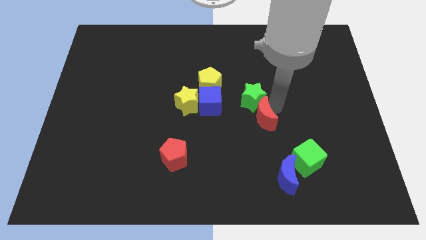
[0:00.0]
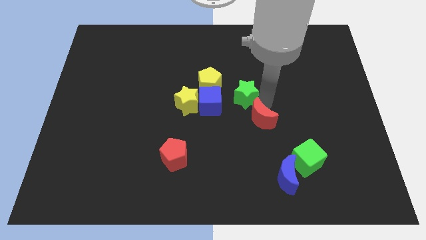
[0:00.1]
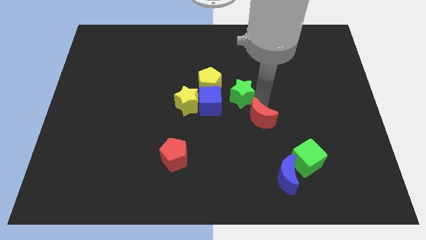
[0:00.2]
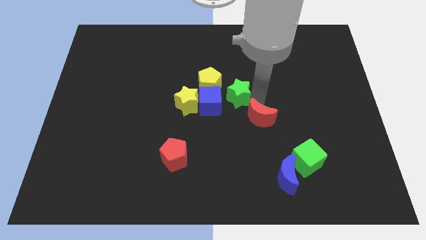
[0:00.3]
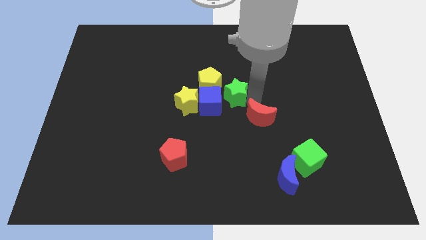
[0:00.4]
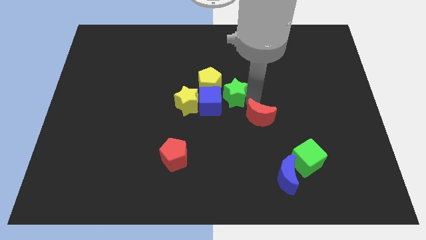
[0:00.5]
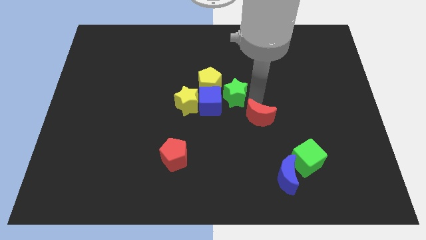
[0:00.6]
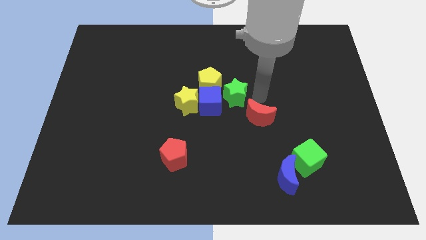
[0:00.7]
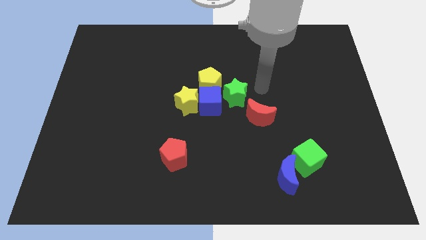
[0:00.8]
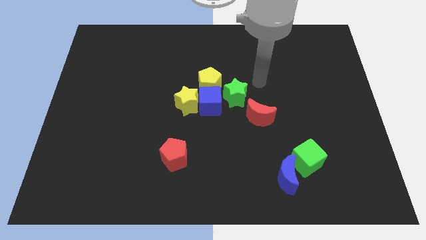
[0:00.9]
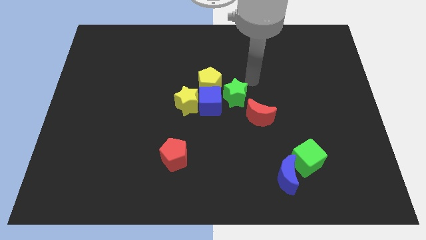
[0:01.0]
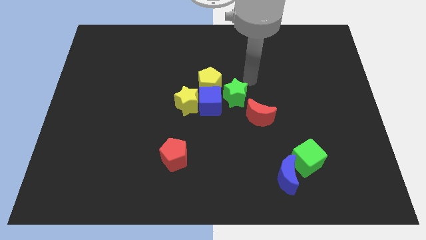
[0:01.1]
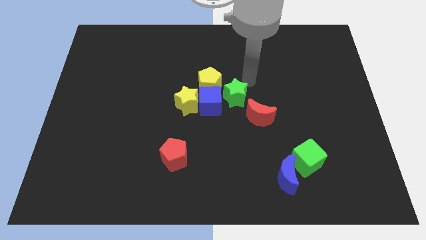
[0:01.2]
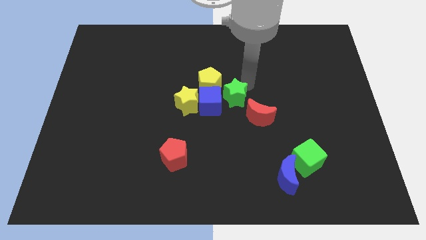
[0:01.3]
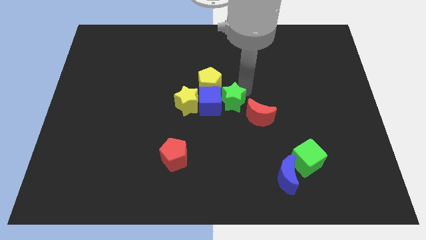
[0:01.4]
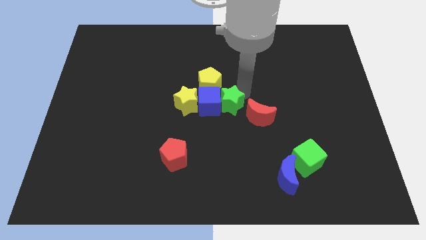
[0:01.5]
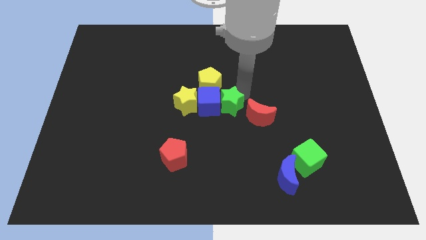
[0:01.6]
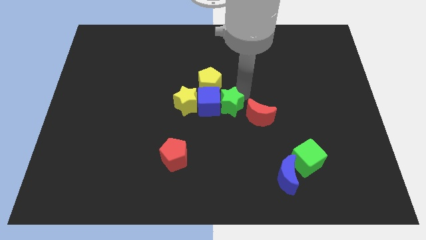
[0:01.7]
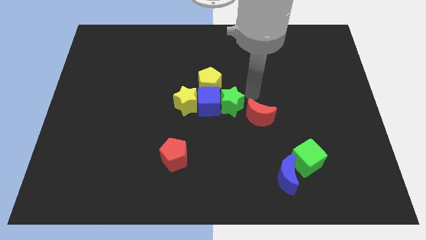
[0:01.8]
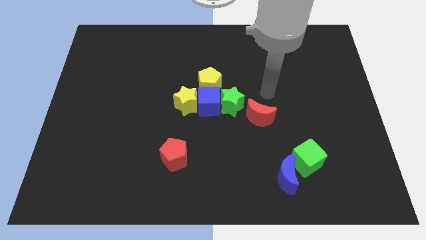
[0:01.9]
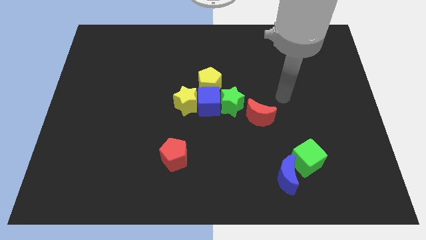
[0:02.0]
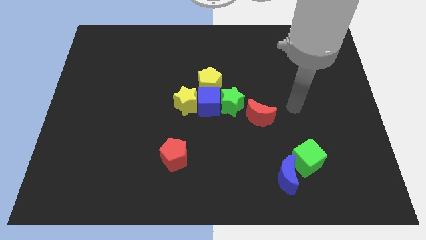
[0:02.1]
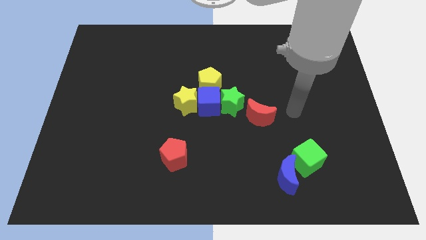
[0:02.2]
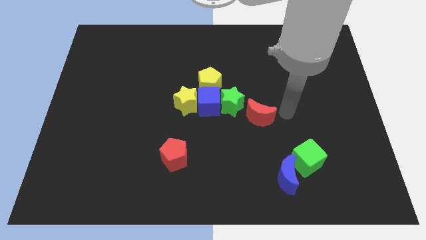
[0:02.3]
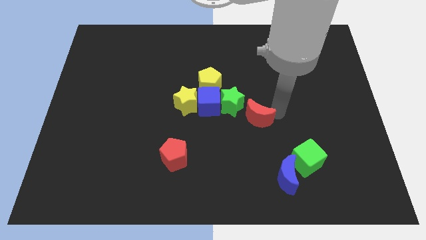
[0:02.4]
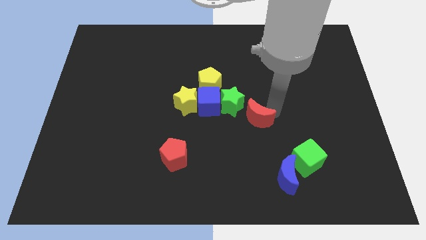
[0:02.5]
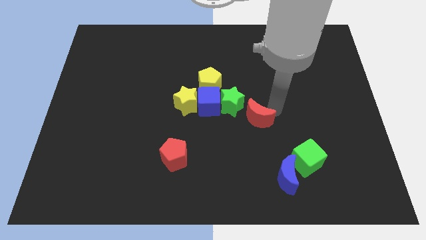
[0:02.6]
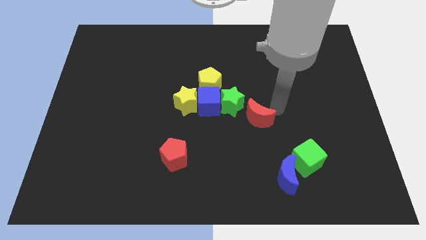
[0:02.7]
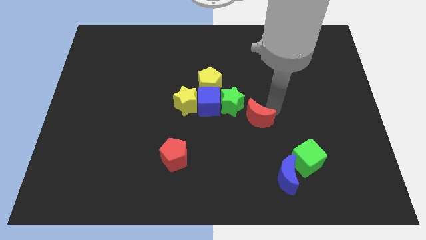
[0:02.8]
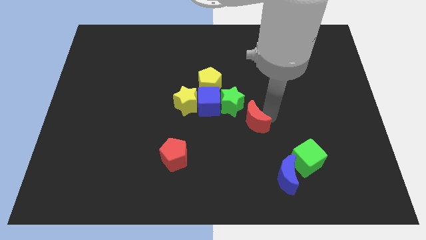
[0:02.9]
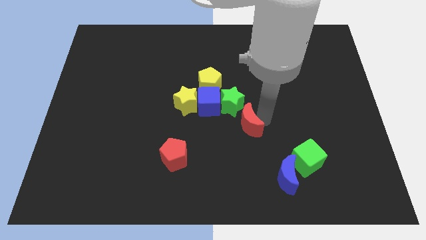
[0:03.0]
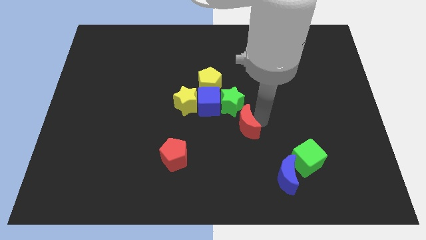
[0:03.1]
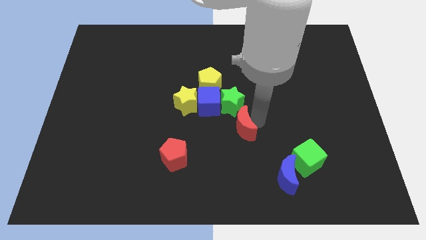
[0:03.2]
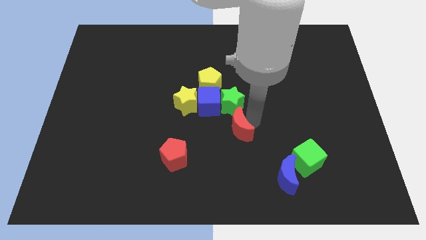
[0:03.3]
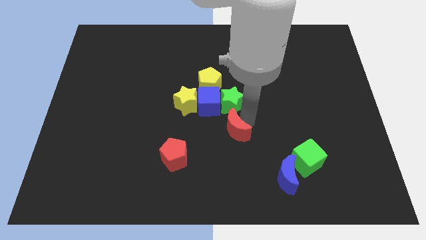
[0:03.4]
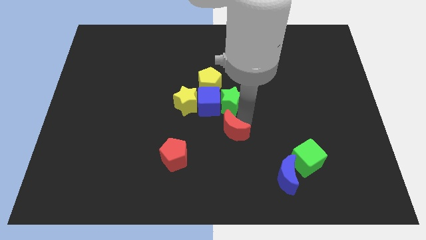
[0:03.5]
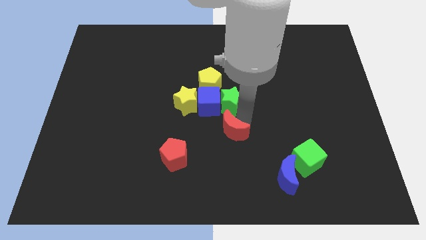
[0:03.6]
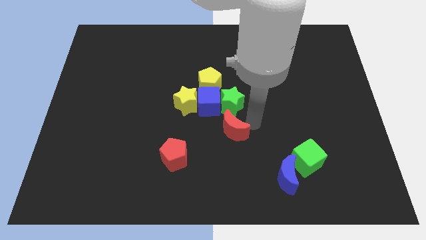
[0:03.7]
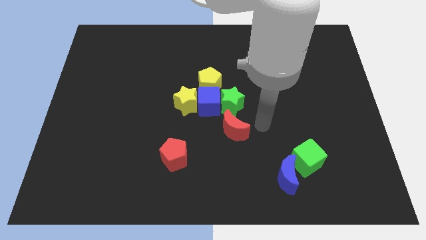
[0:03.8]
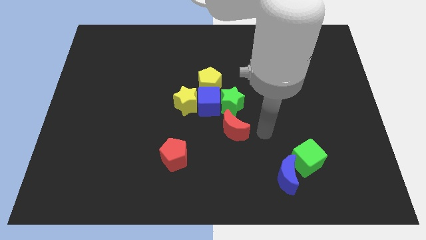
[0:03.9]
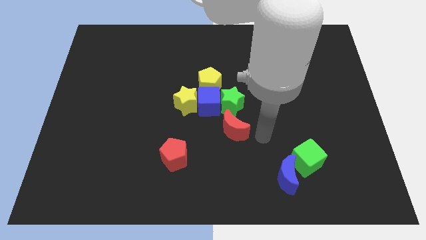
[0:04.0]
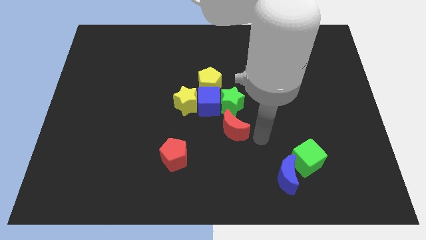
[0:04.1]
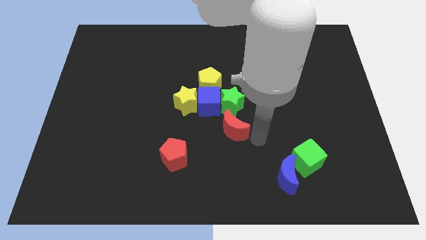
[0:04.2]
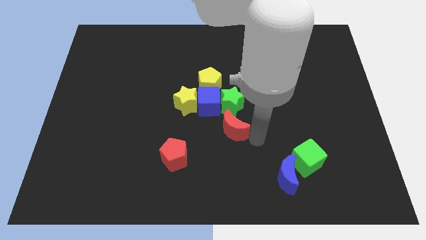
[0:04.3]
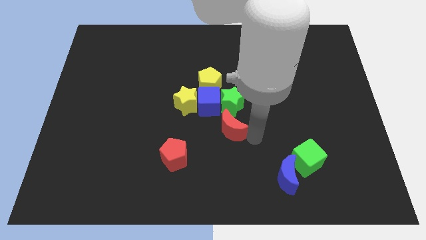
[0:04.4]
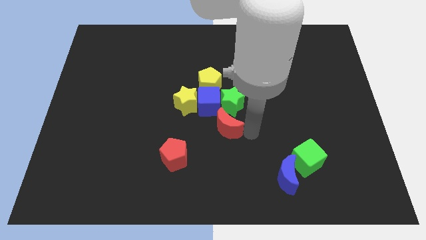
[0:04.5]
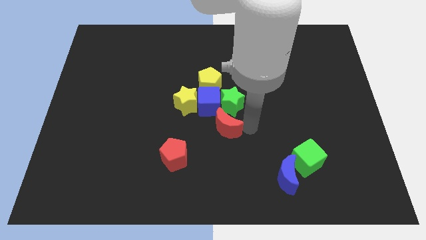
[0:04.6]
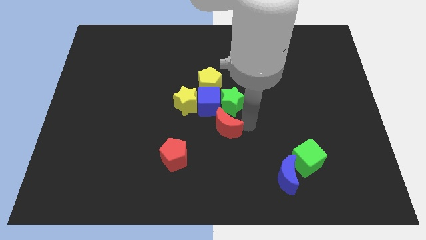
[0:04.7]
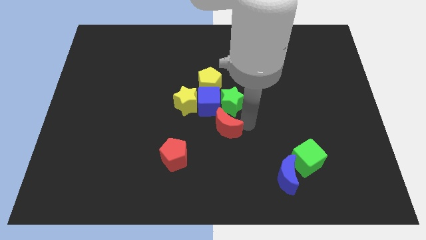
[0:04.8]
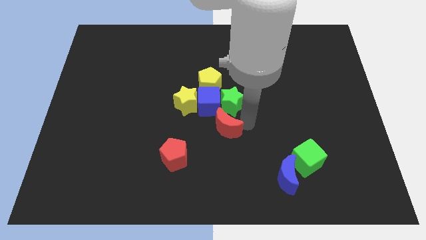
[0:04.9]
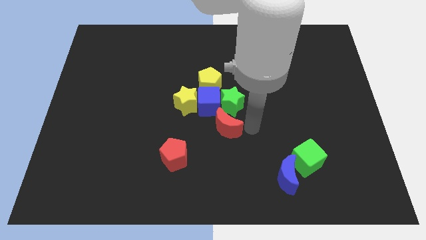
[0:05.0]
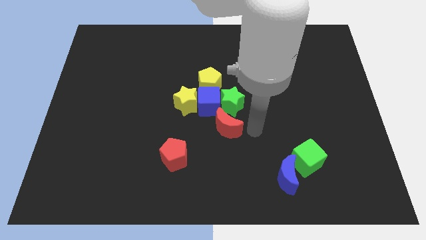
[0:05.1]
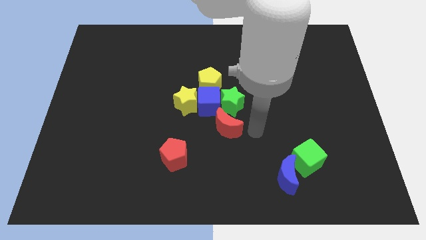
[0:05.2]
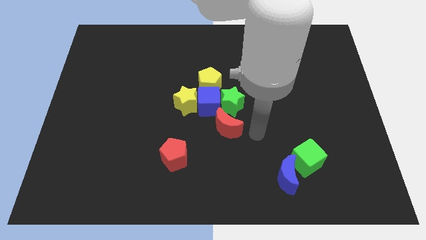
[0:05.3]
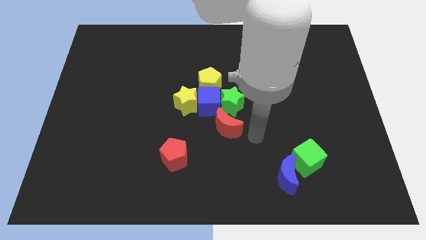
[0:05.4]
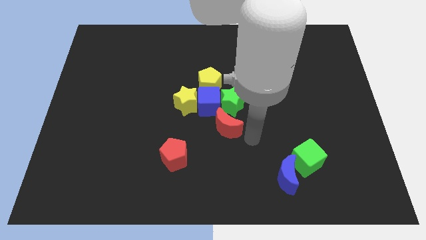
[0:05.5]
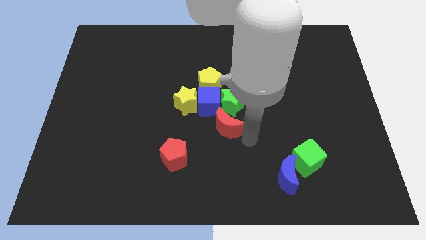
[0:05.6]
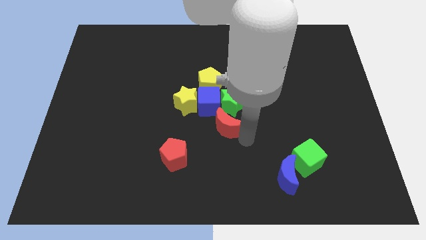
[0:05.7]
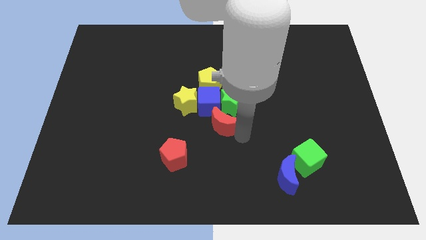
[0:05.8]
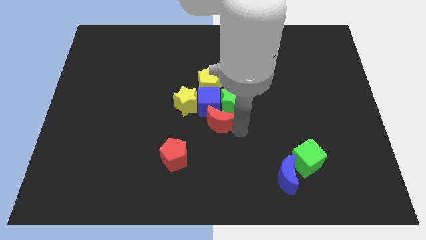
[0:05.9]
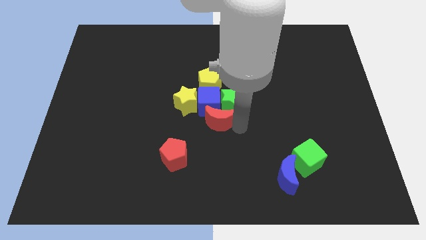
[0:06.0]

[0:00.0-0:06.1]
push the green star and red moon into the group blocks

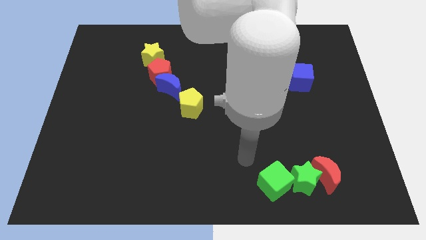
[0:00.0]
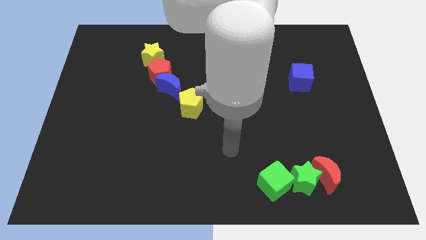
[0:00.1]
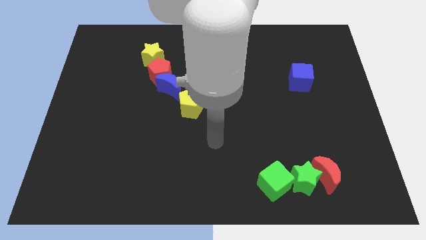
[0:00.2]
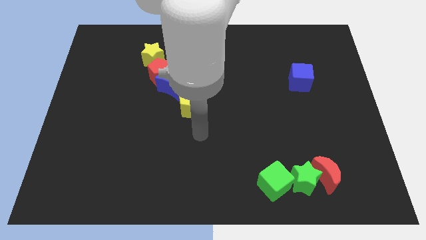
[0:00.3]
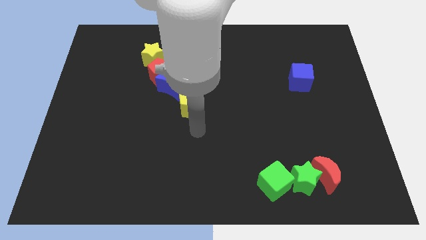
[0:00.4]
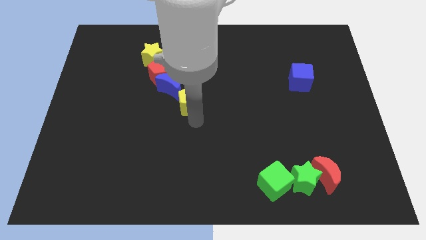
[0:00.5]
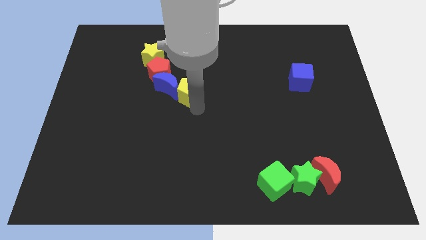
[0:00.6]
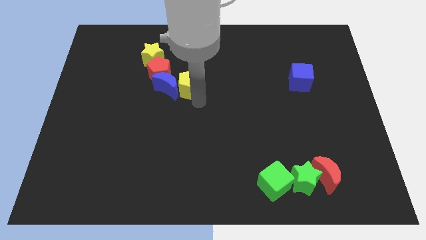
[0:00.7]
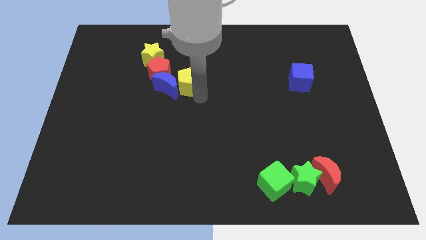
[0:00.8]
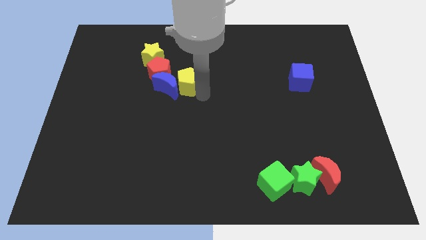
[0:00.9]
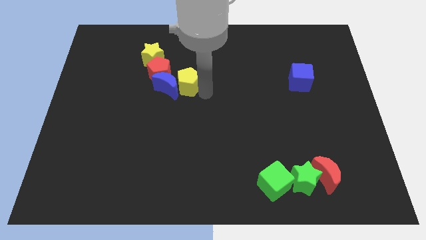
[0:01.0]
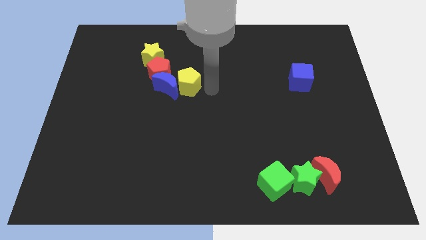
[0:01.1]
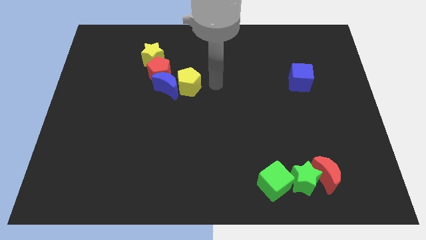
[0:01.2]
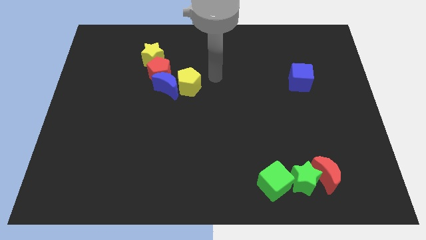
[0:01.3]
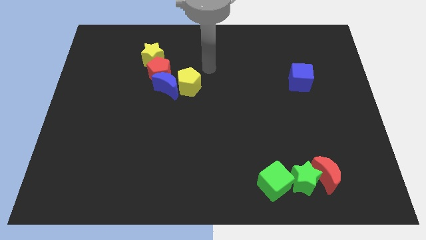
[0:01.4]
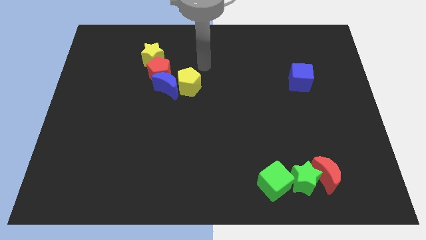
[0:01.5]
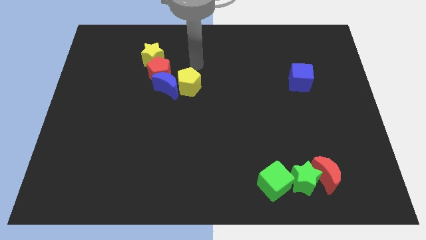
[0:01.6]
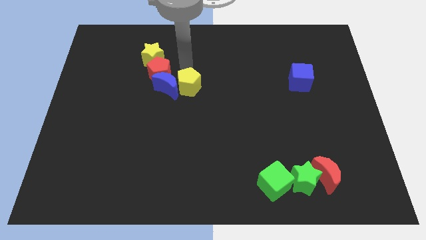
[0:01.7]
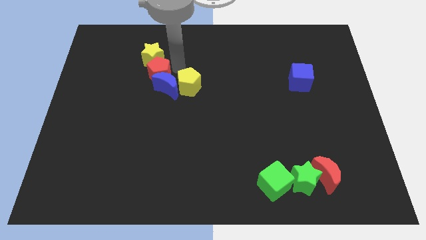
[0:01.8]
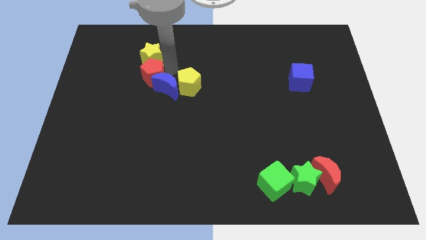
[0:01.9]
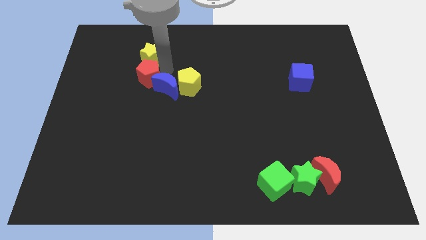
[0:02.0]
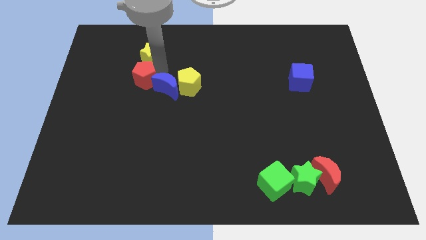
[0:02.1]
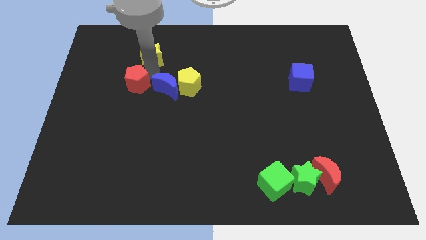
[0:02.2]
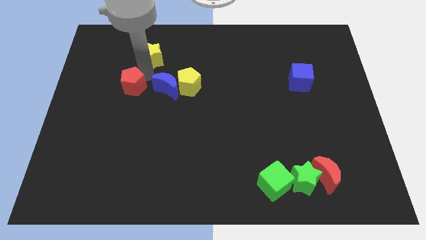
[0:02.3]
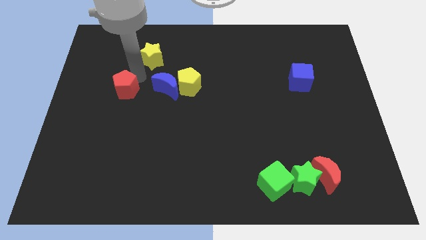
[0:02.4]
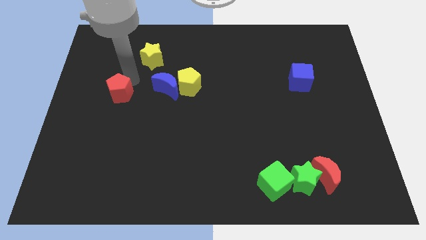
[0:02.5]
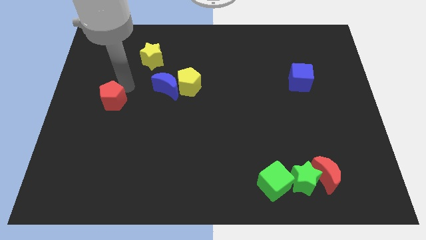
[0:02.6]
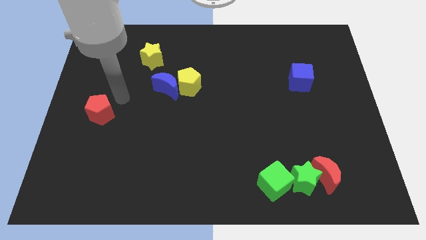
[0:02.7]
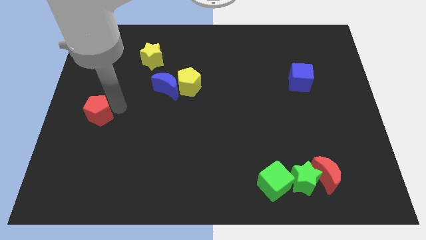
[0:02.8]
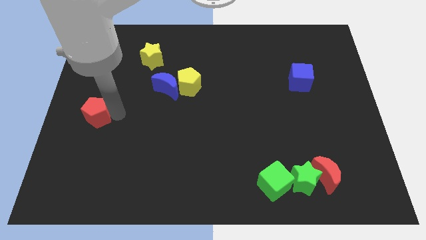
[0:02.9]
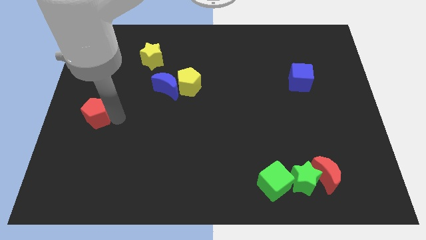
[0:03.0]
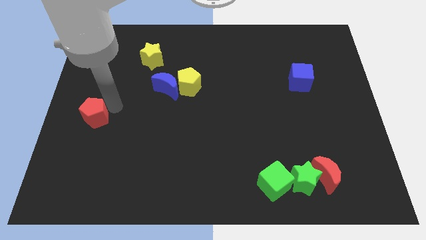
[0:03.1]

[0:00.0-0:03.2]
place both the pentagons diagonal to the blue crescent
